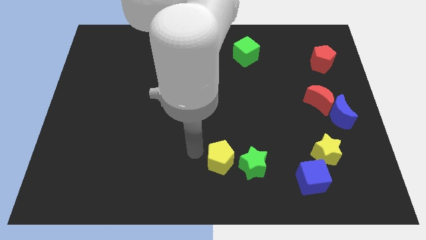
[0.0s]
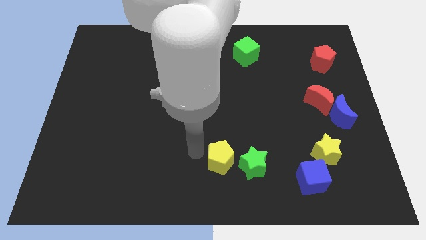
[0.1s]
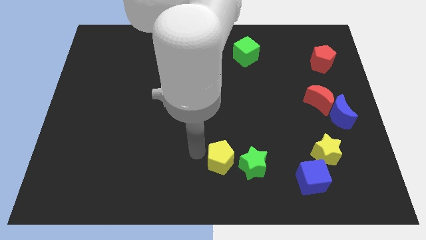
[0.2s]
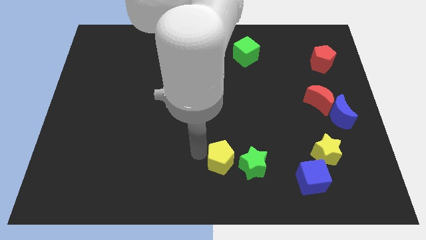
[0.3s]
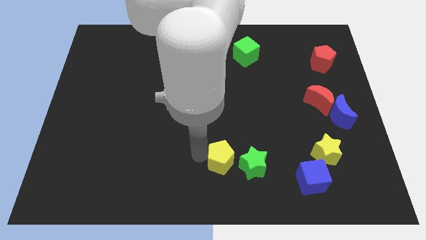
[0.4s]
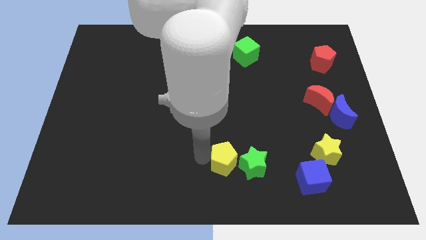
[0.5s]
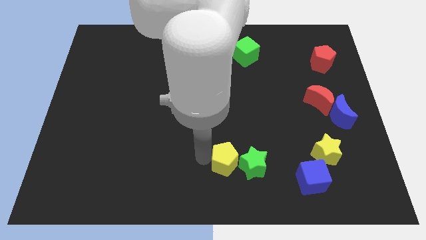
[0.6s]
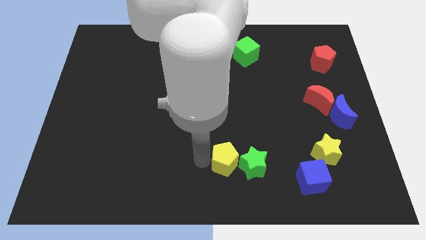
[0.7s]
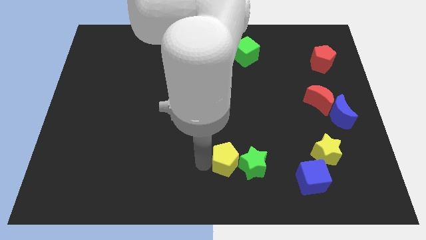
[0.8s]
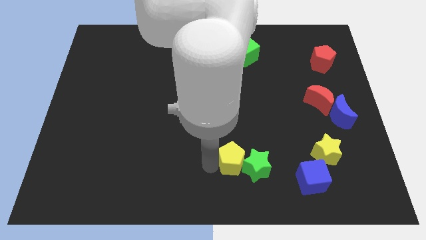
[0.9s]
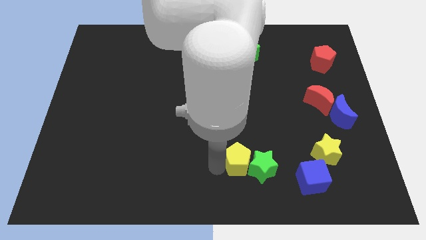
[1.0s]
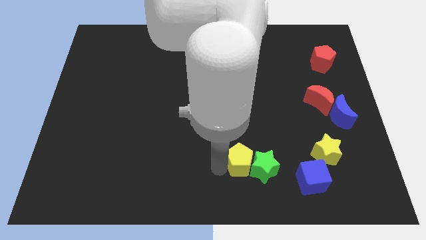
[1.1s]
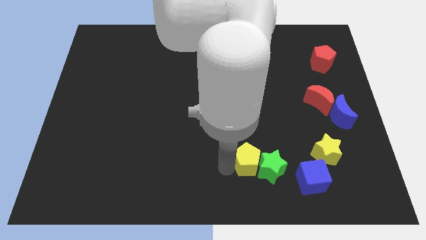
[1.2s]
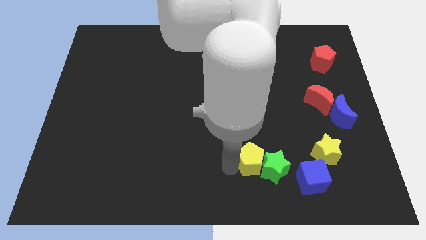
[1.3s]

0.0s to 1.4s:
push the yellow pentagon into the green star

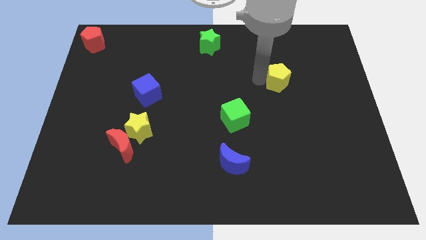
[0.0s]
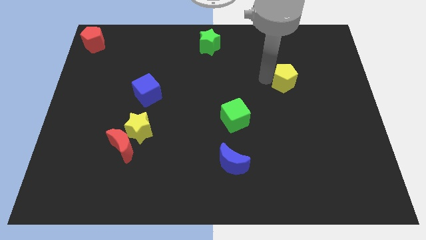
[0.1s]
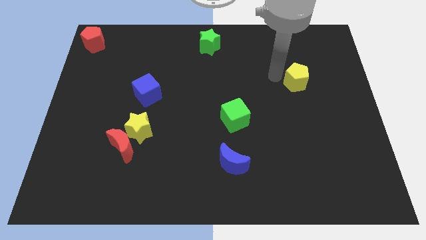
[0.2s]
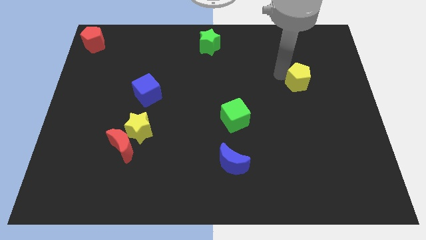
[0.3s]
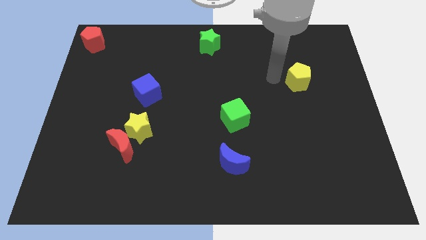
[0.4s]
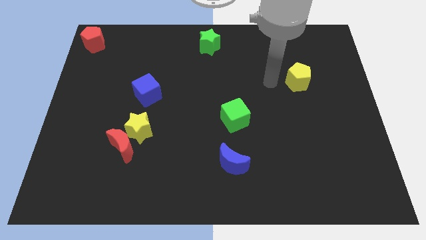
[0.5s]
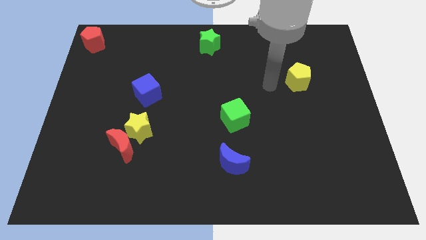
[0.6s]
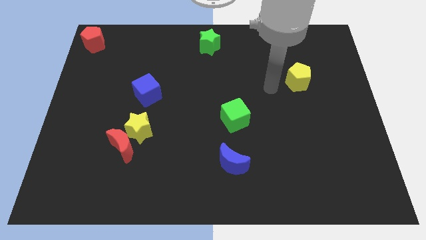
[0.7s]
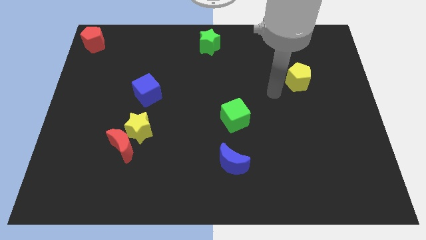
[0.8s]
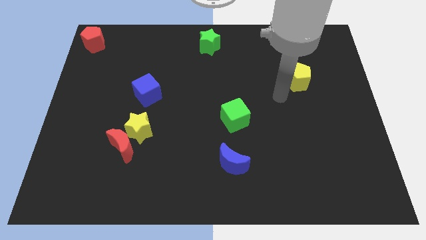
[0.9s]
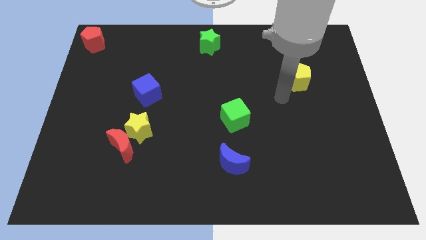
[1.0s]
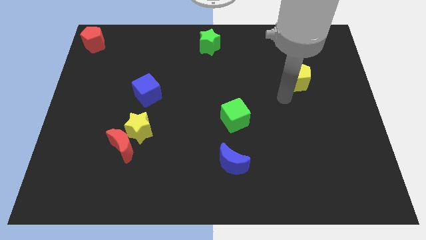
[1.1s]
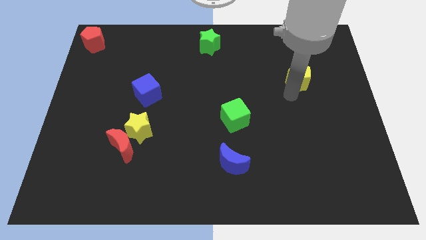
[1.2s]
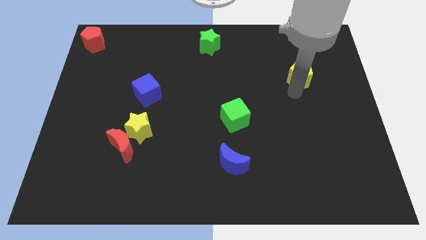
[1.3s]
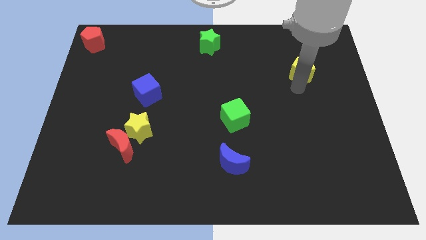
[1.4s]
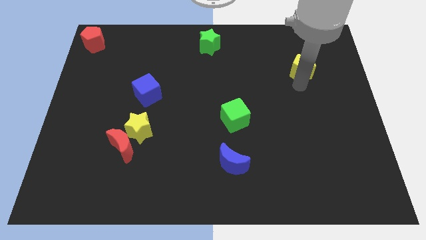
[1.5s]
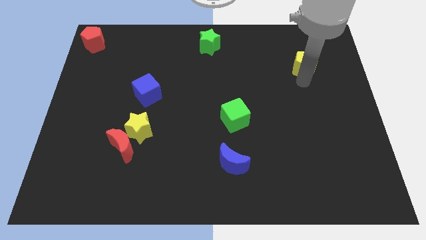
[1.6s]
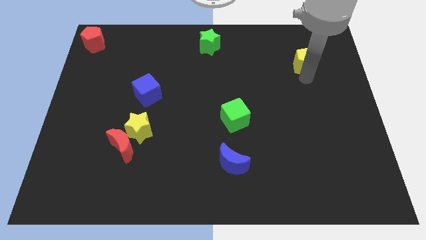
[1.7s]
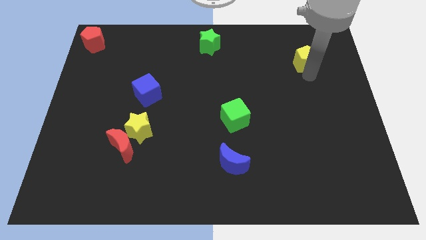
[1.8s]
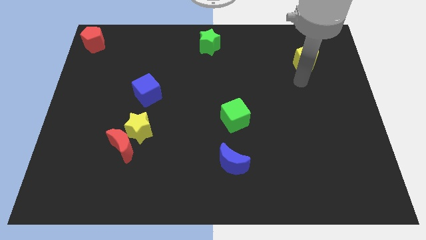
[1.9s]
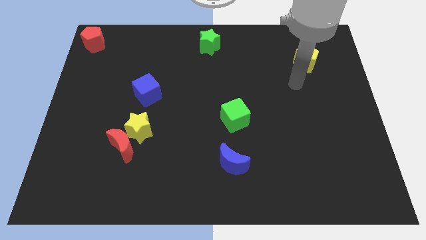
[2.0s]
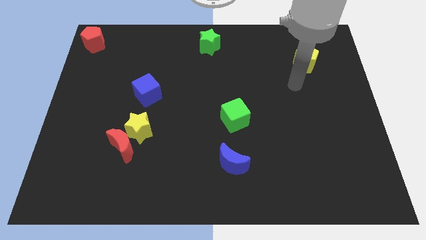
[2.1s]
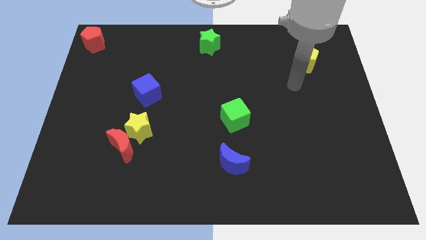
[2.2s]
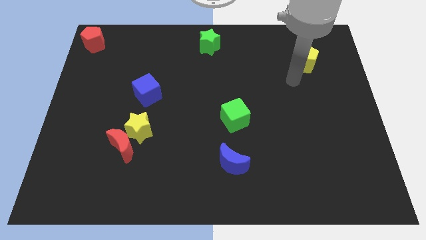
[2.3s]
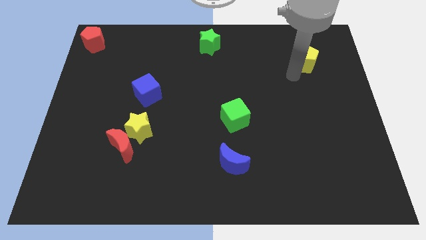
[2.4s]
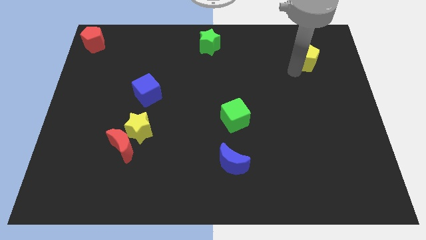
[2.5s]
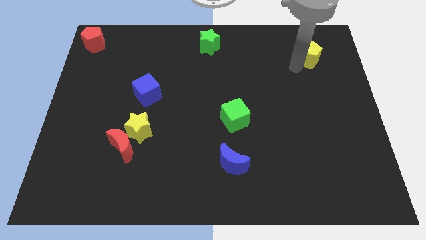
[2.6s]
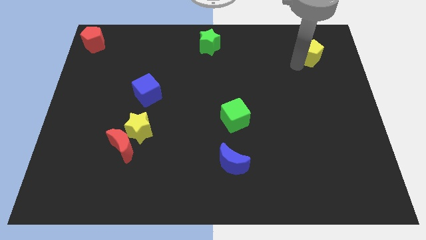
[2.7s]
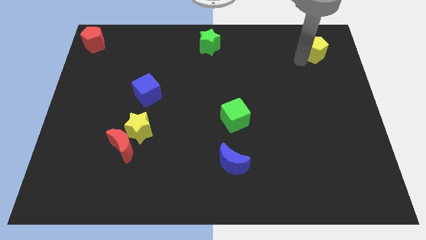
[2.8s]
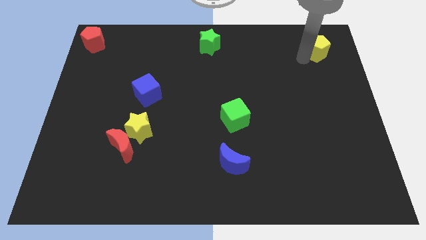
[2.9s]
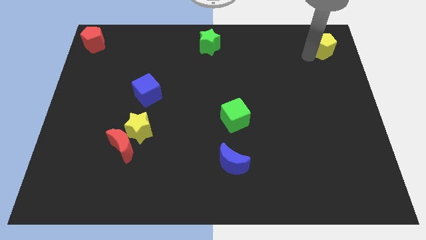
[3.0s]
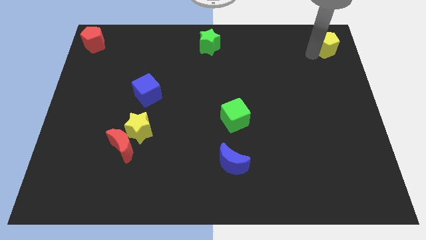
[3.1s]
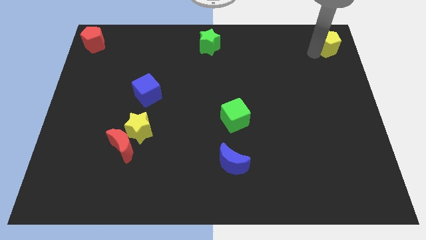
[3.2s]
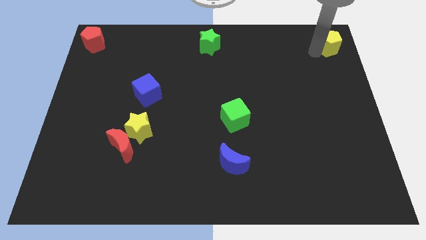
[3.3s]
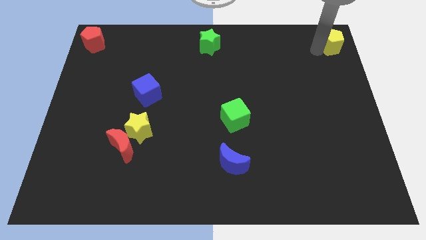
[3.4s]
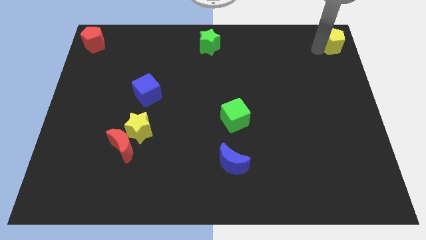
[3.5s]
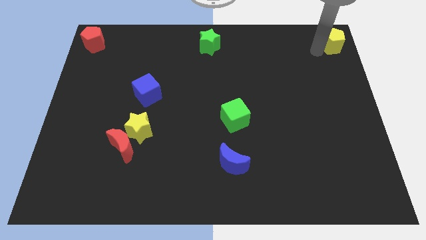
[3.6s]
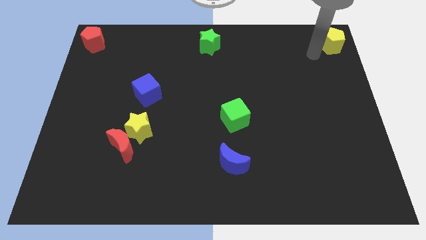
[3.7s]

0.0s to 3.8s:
drag the yellow pentagon to the top right side of the table

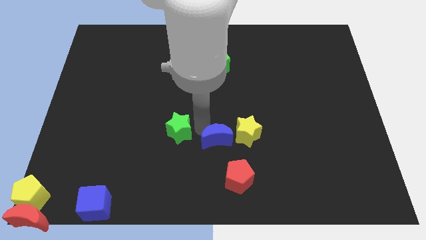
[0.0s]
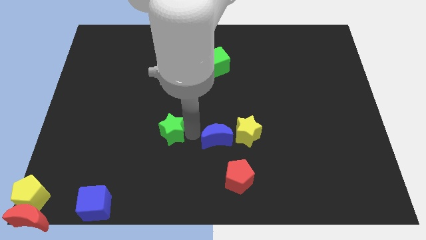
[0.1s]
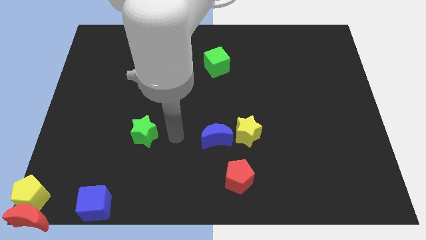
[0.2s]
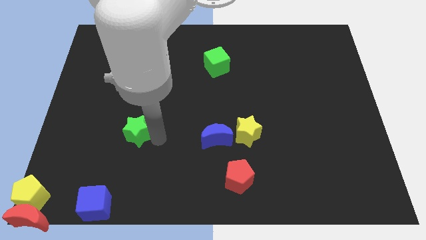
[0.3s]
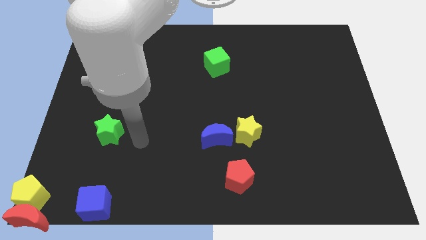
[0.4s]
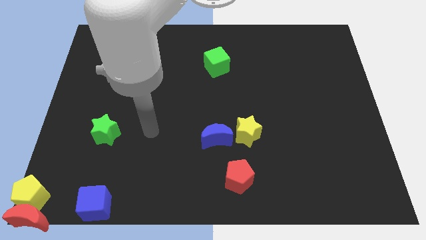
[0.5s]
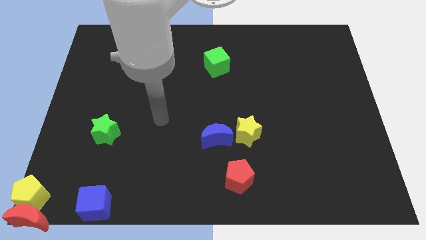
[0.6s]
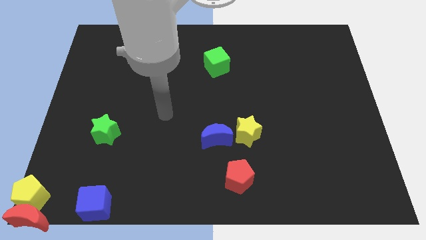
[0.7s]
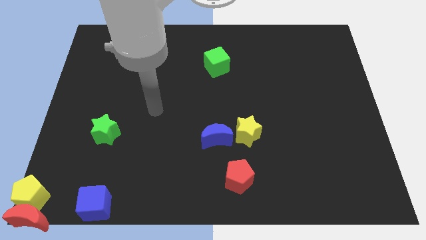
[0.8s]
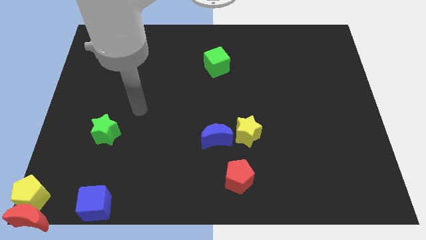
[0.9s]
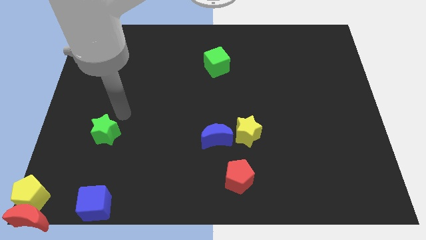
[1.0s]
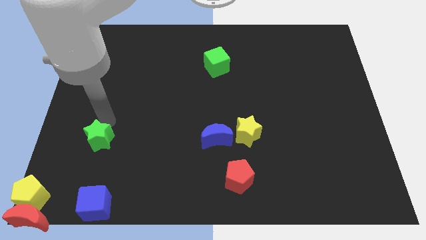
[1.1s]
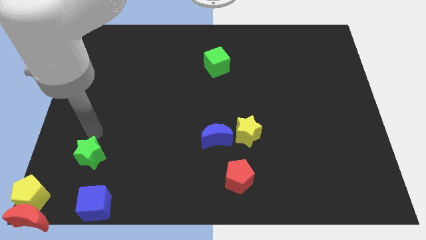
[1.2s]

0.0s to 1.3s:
push the green star to the top side of the blue cube

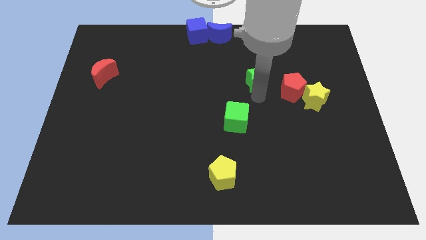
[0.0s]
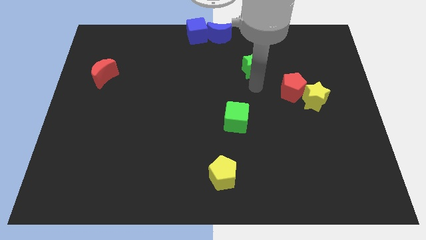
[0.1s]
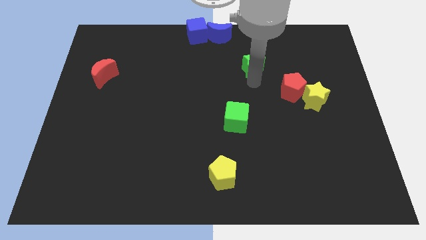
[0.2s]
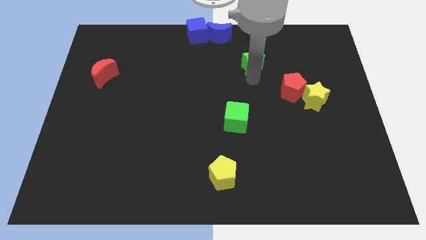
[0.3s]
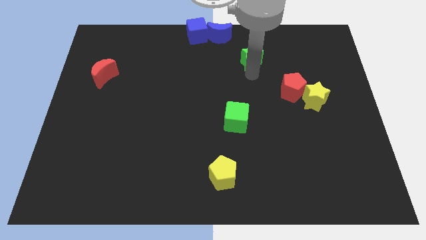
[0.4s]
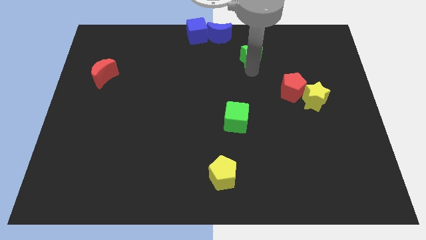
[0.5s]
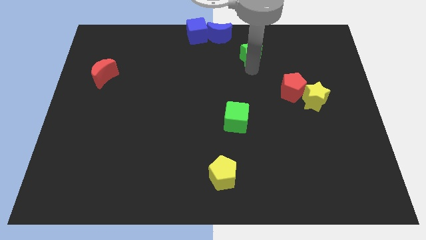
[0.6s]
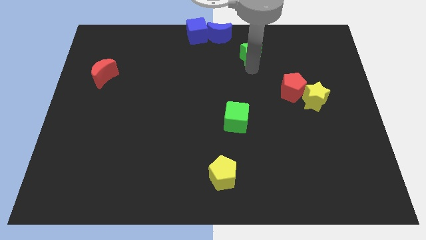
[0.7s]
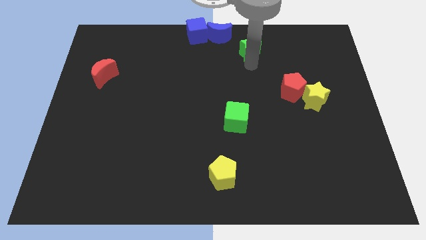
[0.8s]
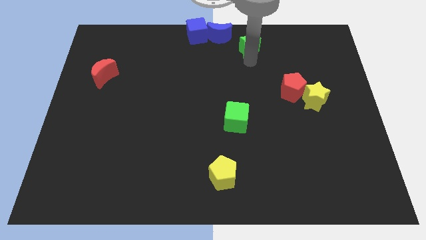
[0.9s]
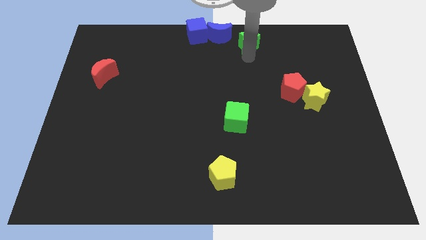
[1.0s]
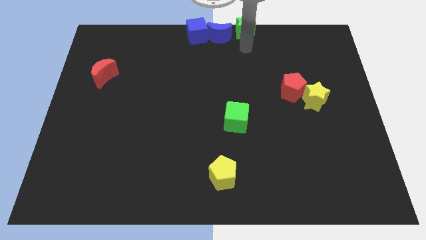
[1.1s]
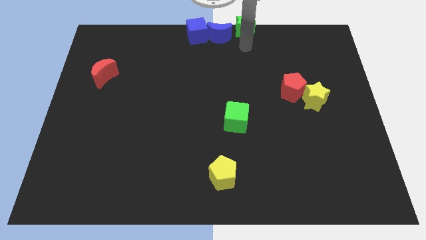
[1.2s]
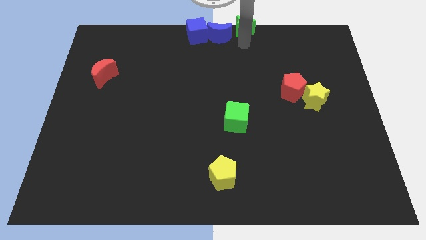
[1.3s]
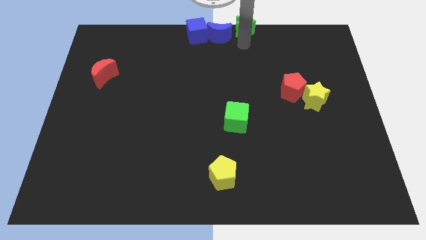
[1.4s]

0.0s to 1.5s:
place the green star right to the blue moon

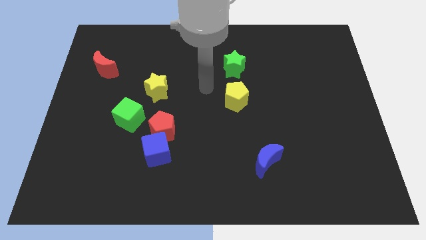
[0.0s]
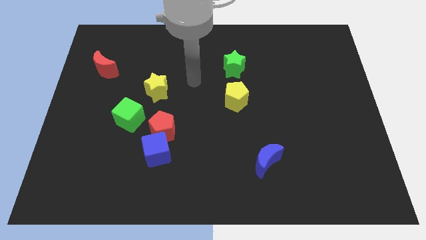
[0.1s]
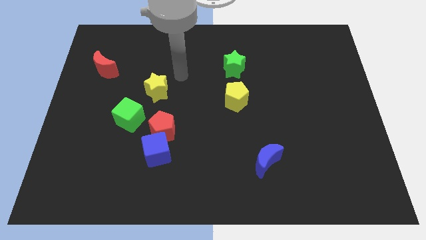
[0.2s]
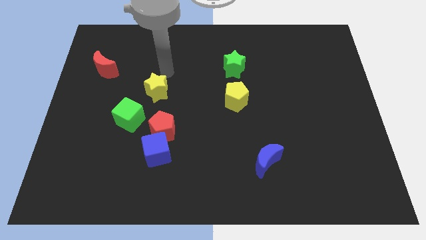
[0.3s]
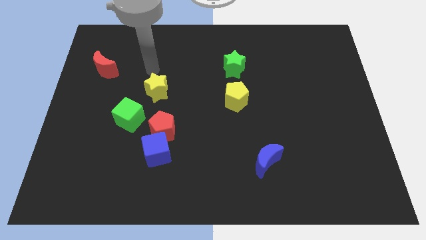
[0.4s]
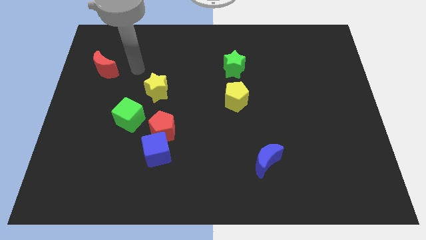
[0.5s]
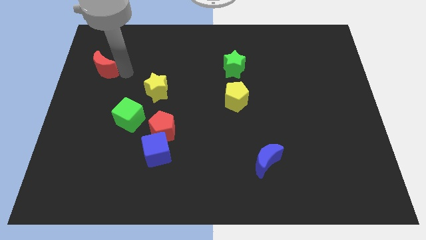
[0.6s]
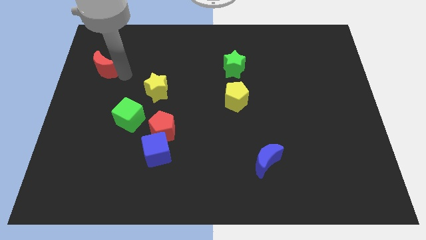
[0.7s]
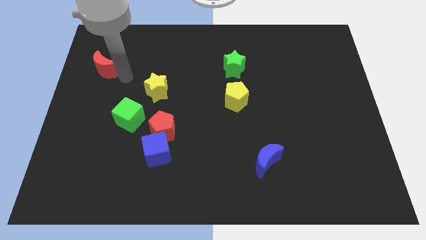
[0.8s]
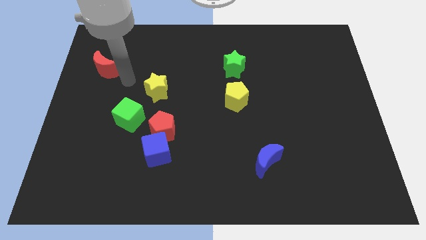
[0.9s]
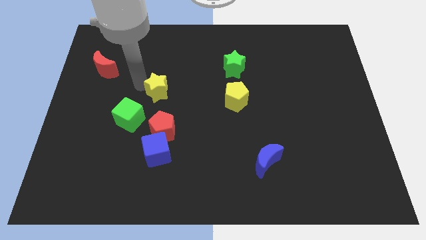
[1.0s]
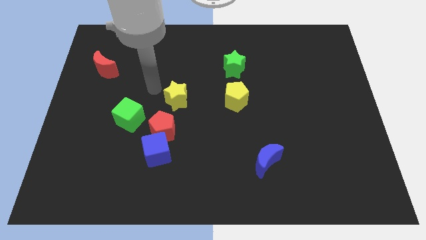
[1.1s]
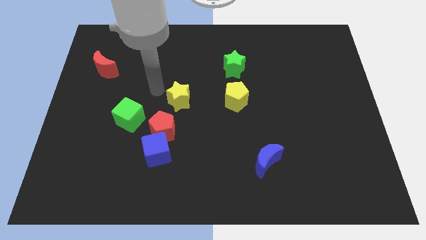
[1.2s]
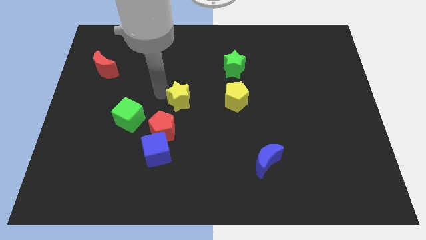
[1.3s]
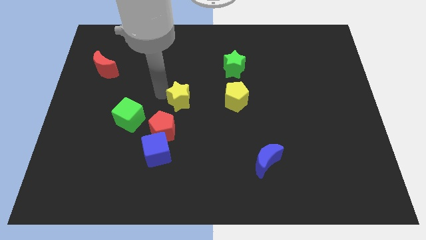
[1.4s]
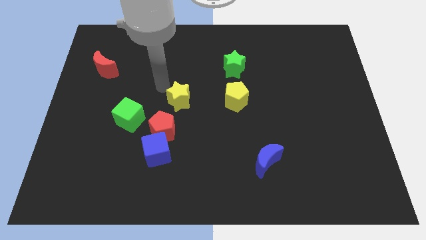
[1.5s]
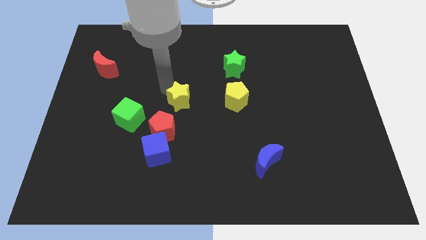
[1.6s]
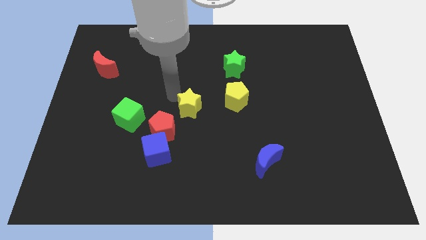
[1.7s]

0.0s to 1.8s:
push the yellow star to the left of yellow pentagon
